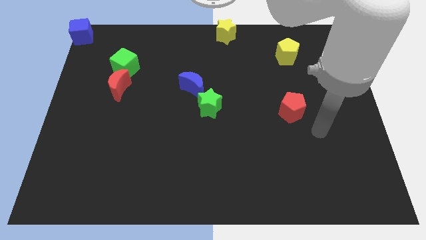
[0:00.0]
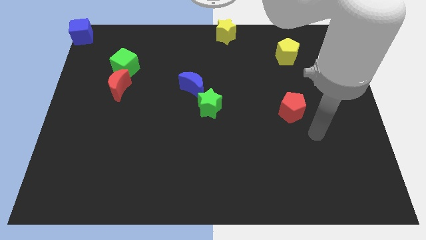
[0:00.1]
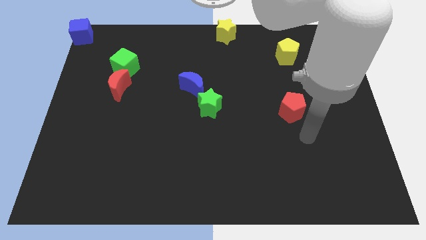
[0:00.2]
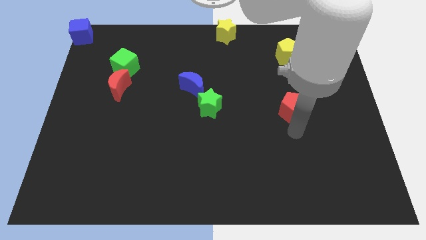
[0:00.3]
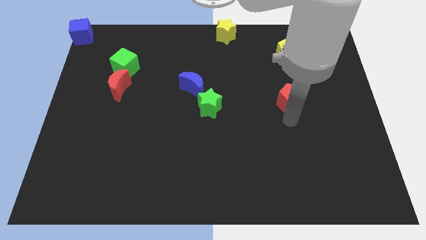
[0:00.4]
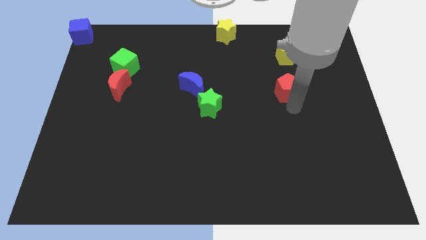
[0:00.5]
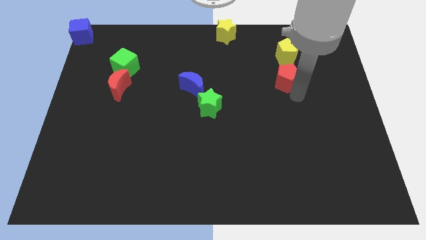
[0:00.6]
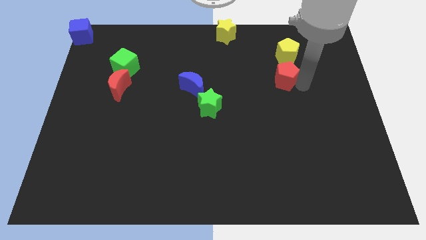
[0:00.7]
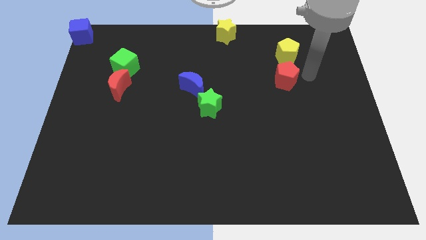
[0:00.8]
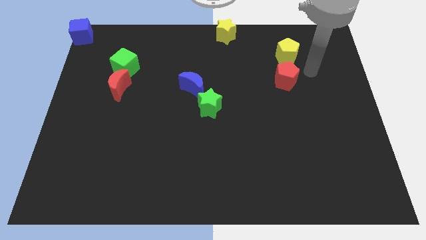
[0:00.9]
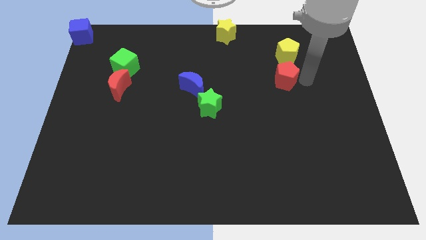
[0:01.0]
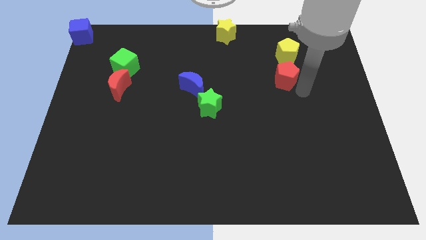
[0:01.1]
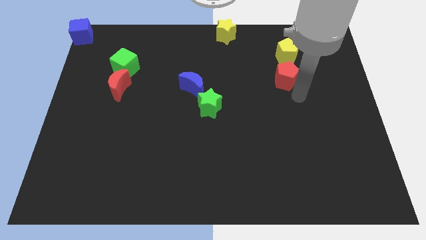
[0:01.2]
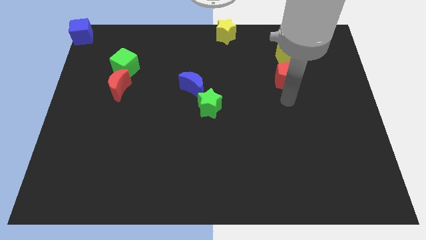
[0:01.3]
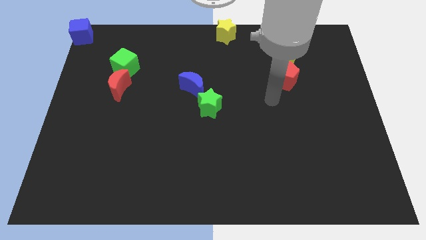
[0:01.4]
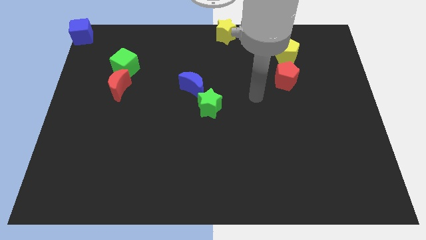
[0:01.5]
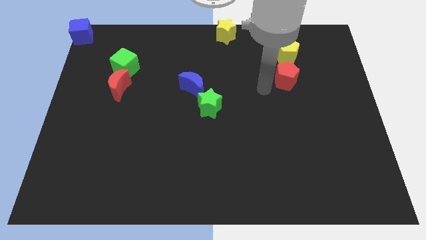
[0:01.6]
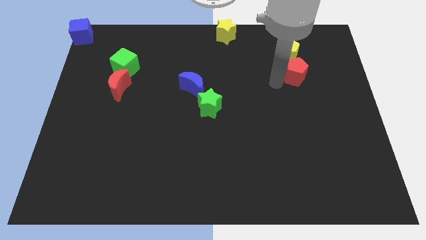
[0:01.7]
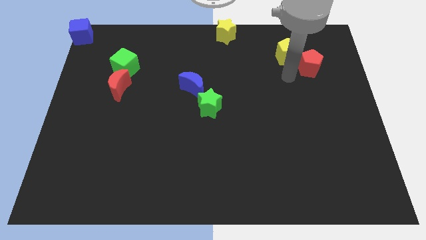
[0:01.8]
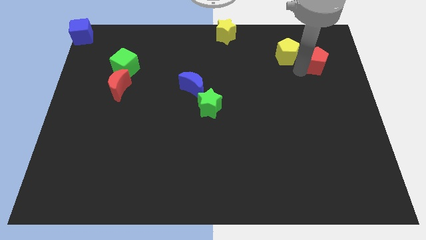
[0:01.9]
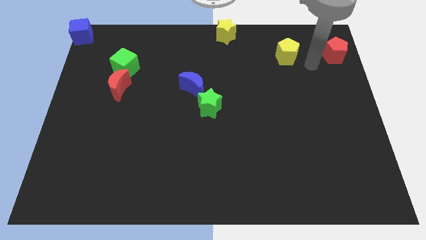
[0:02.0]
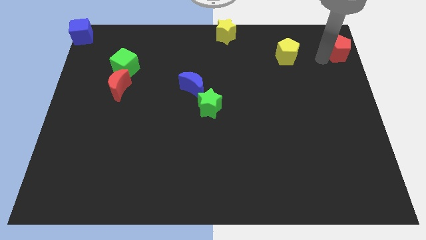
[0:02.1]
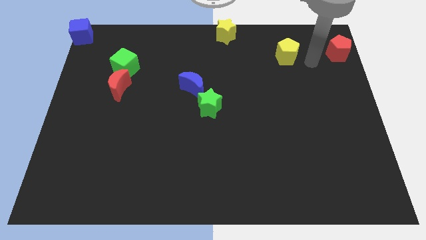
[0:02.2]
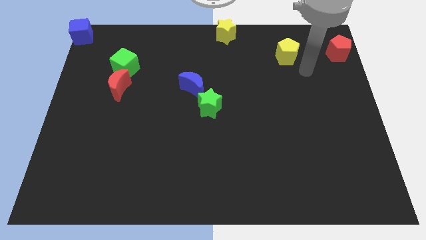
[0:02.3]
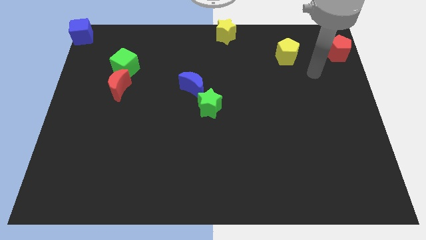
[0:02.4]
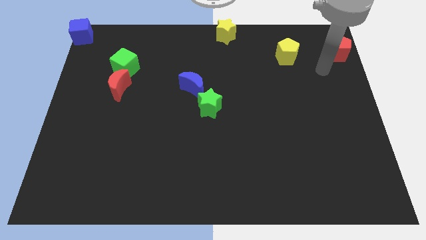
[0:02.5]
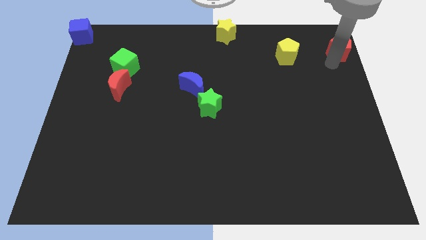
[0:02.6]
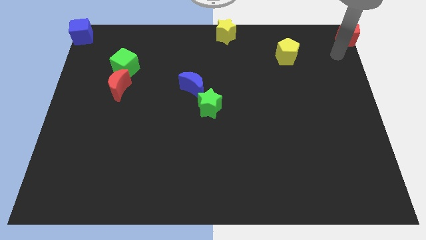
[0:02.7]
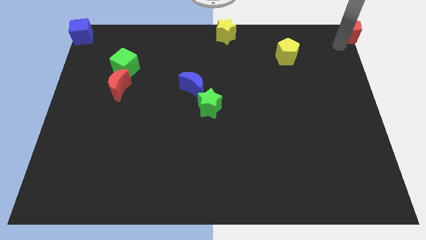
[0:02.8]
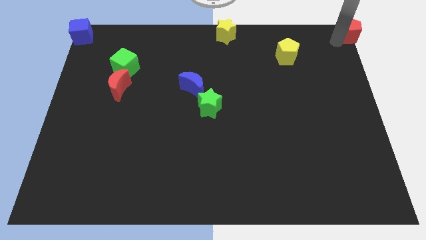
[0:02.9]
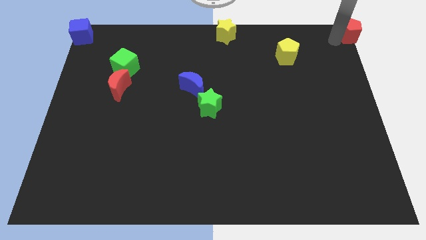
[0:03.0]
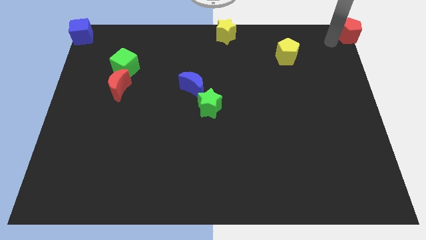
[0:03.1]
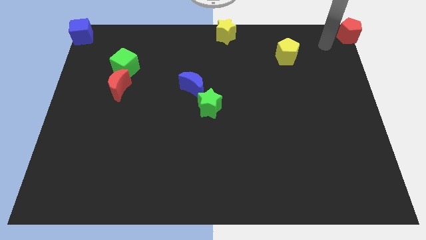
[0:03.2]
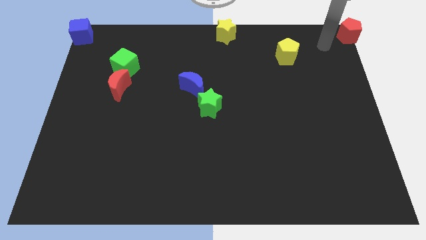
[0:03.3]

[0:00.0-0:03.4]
put the red pentagon at the top right corner

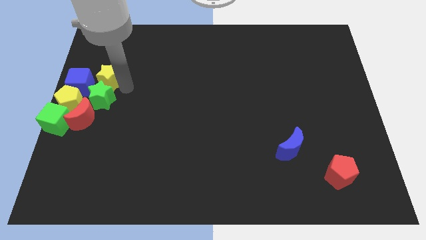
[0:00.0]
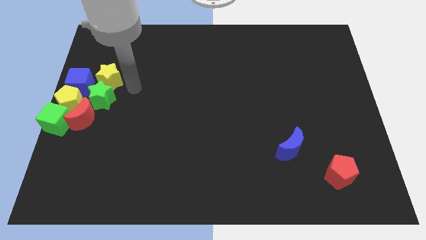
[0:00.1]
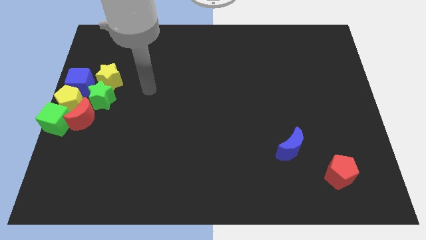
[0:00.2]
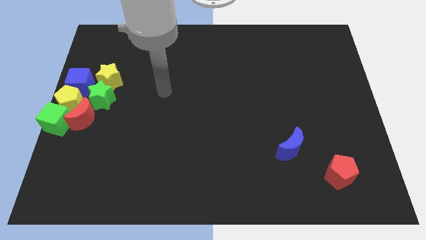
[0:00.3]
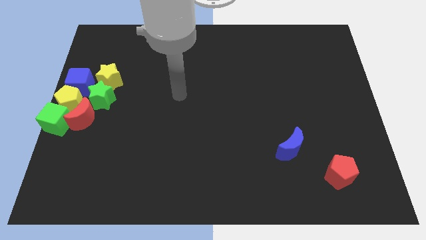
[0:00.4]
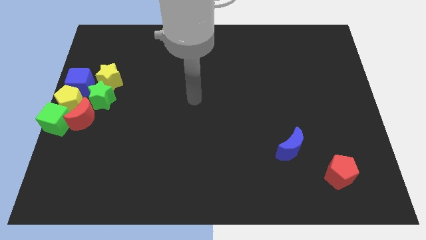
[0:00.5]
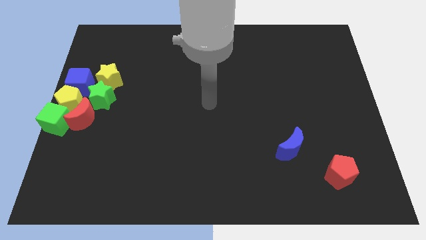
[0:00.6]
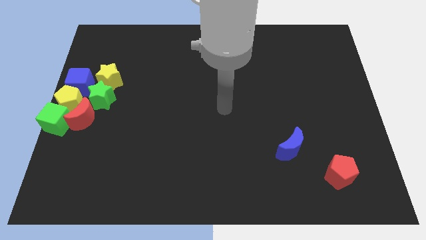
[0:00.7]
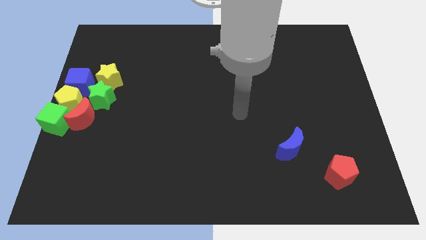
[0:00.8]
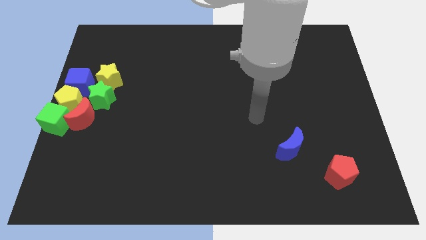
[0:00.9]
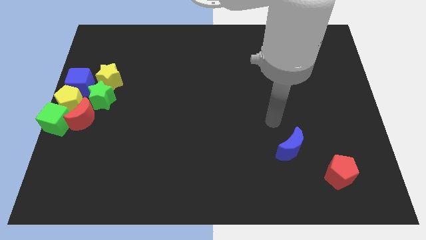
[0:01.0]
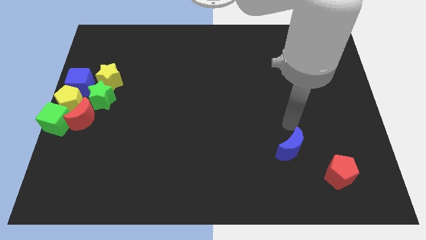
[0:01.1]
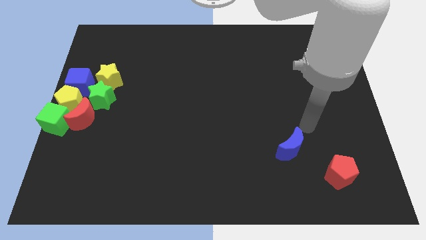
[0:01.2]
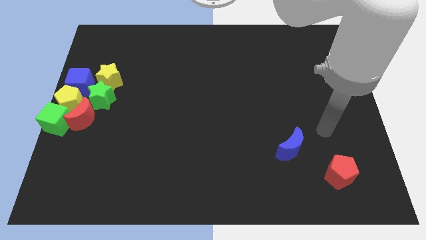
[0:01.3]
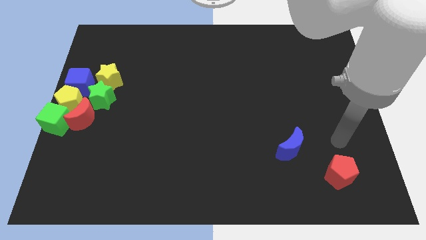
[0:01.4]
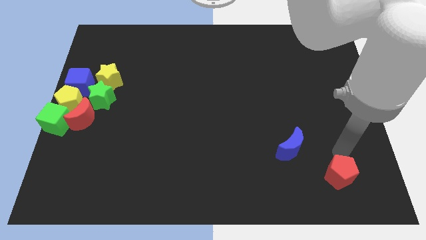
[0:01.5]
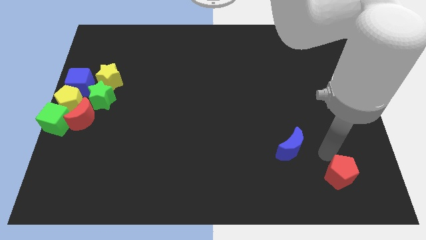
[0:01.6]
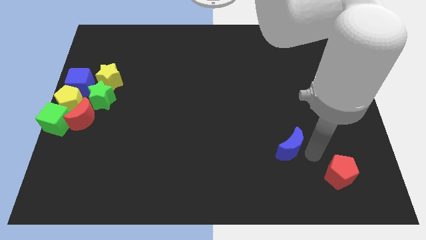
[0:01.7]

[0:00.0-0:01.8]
move your hand away from the yellow star

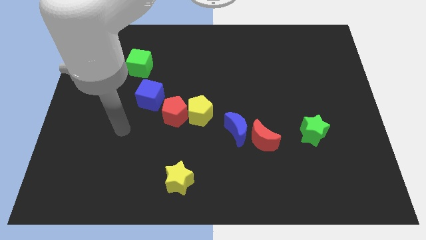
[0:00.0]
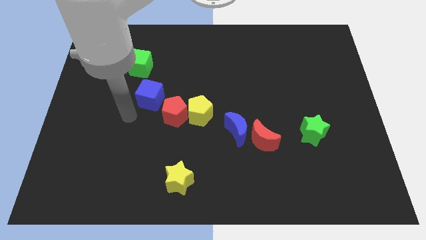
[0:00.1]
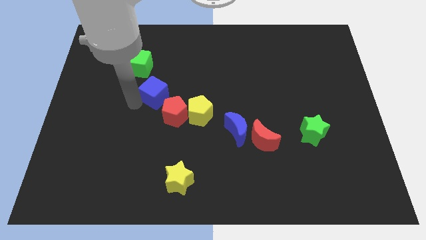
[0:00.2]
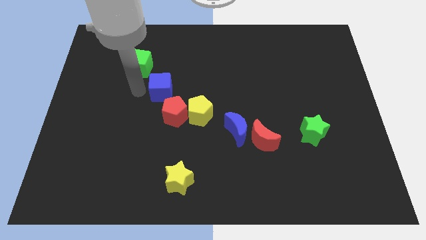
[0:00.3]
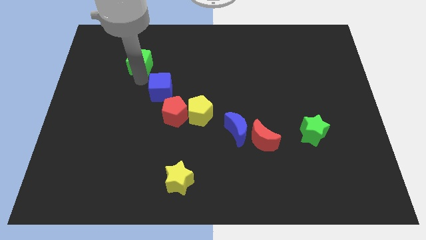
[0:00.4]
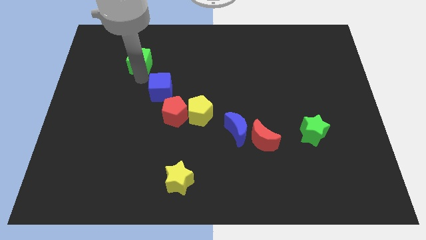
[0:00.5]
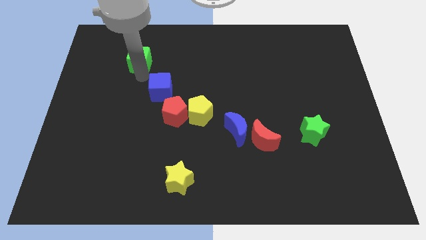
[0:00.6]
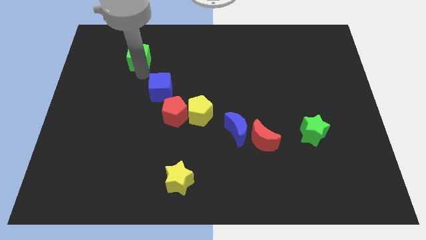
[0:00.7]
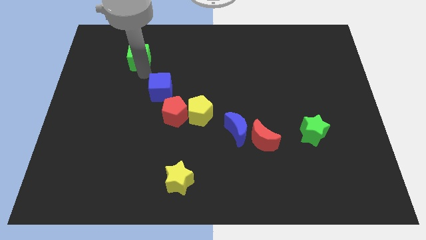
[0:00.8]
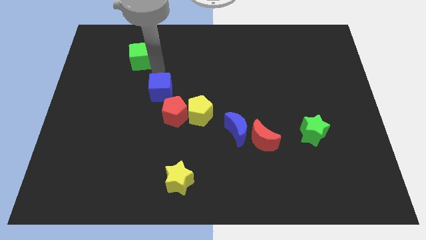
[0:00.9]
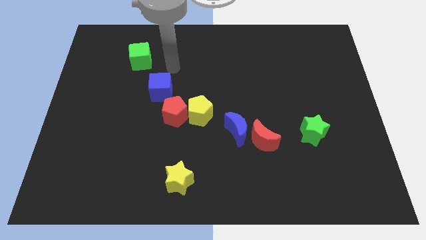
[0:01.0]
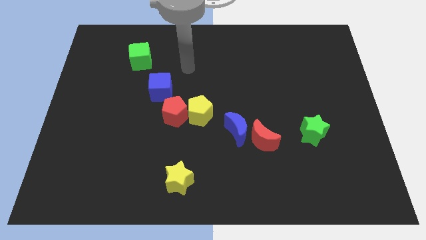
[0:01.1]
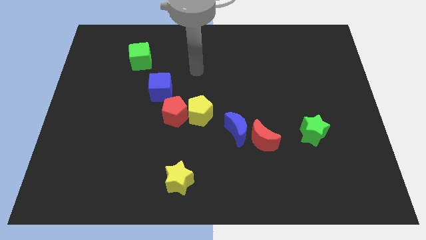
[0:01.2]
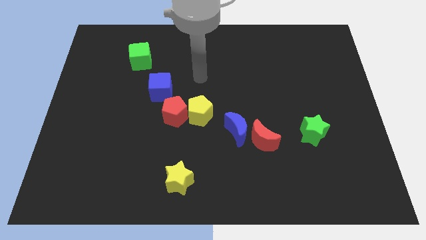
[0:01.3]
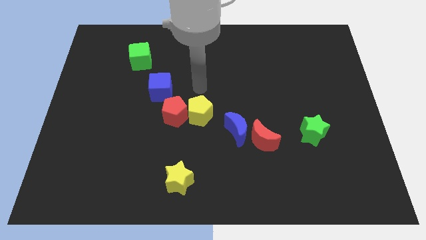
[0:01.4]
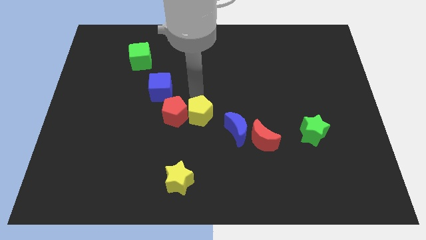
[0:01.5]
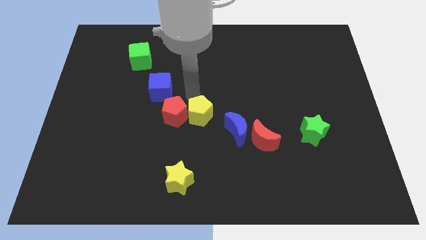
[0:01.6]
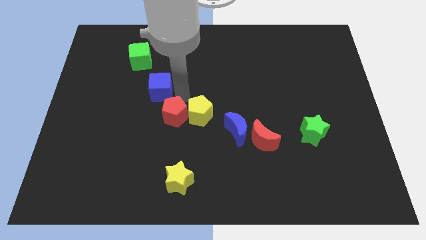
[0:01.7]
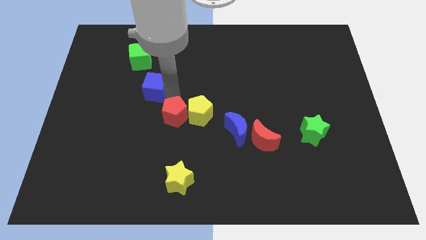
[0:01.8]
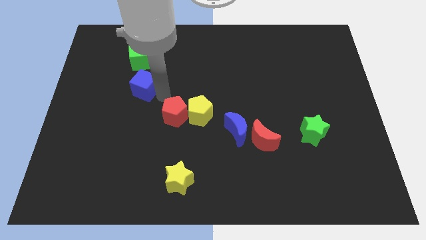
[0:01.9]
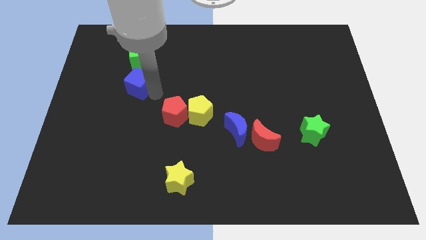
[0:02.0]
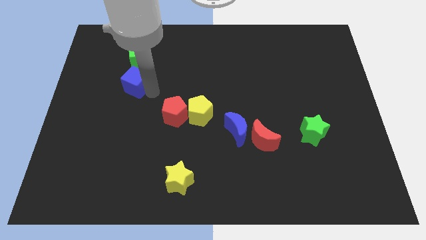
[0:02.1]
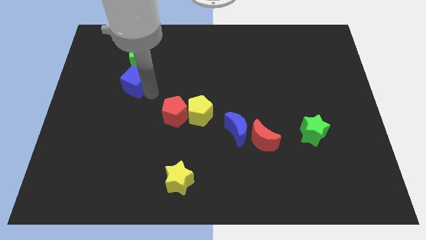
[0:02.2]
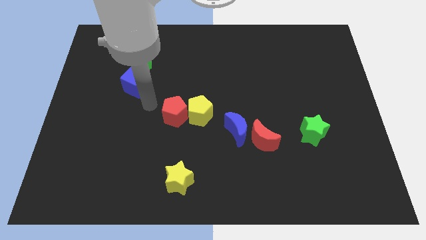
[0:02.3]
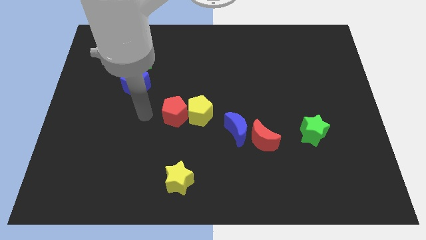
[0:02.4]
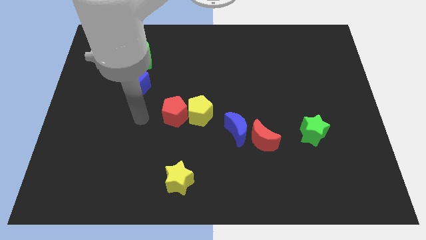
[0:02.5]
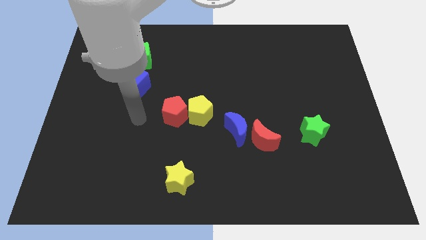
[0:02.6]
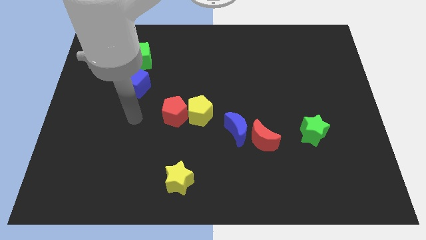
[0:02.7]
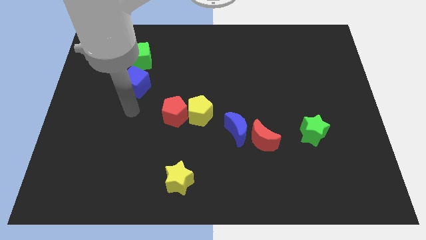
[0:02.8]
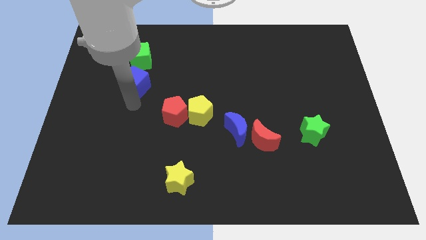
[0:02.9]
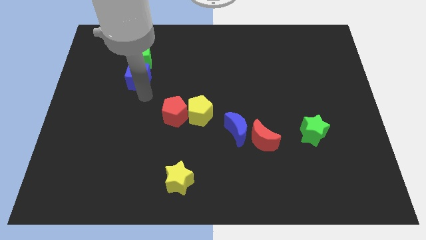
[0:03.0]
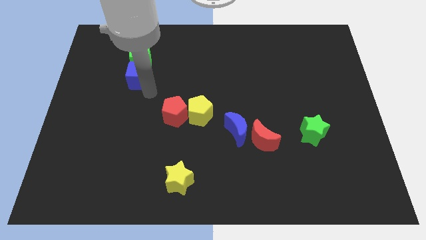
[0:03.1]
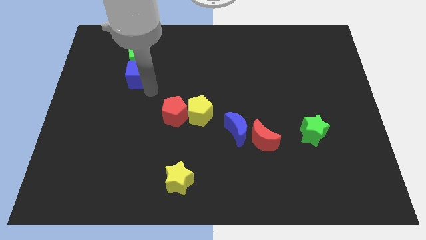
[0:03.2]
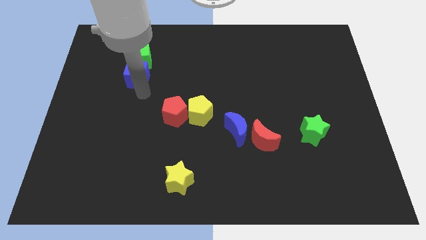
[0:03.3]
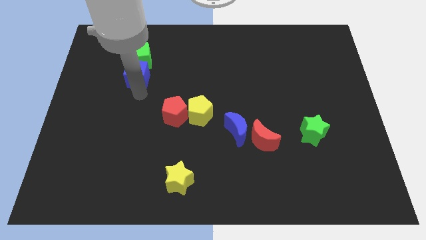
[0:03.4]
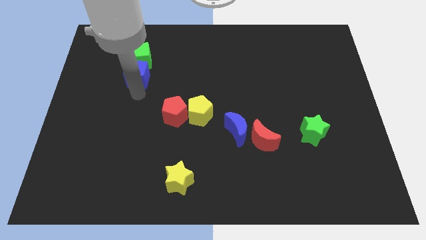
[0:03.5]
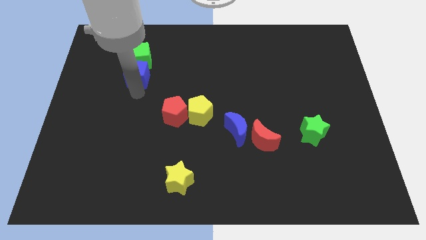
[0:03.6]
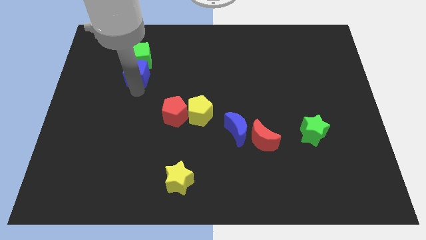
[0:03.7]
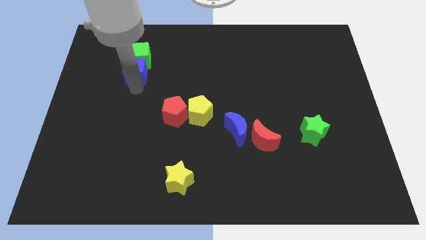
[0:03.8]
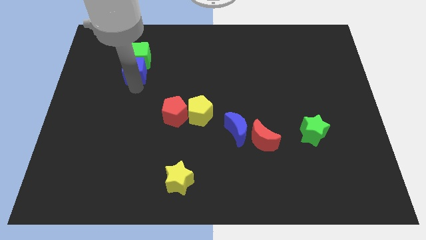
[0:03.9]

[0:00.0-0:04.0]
move the green cube slightly towards the top
